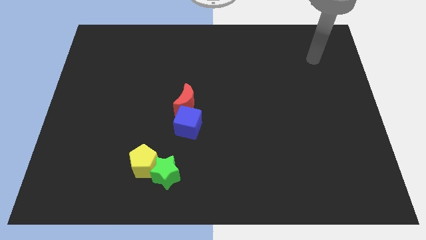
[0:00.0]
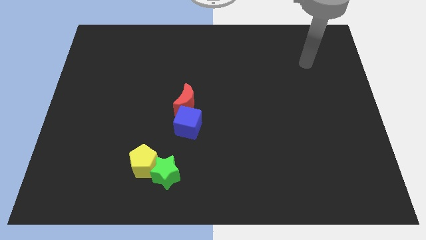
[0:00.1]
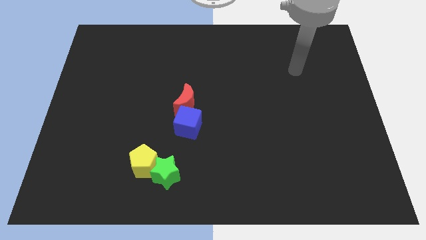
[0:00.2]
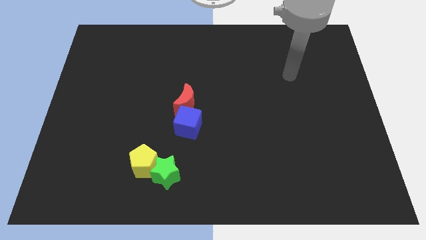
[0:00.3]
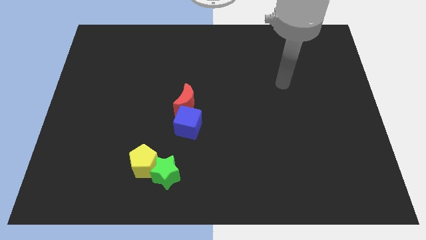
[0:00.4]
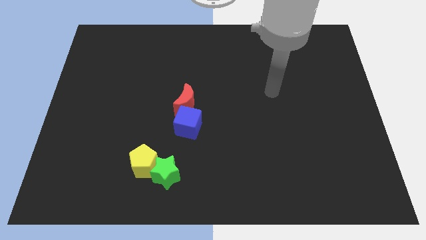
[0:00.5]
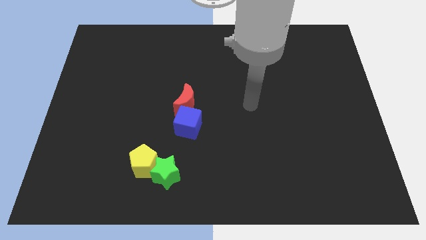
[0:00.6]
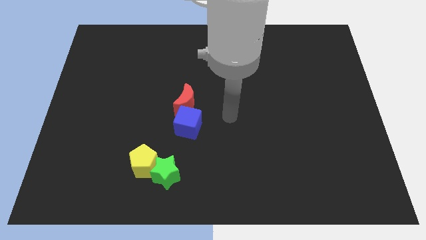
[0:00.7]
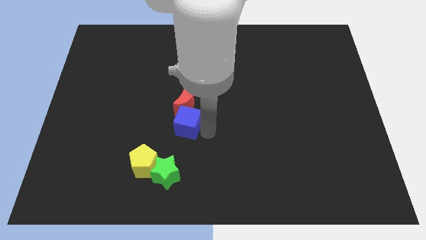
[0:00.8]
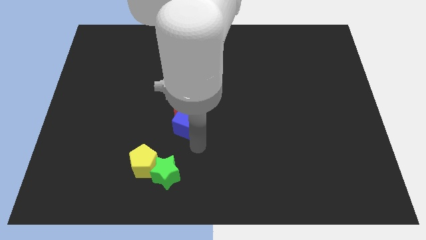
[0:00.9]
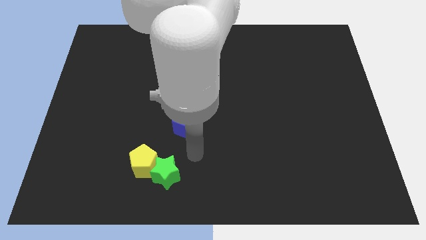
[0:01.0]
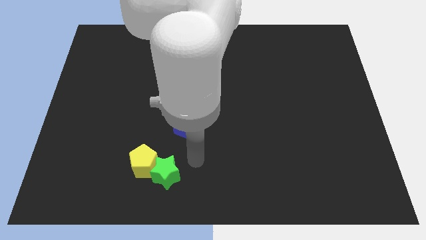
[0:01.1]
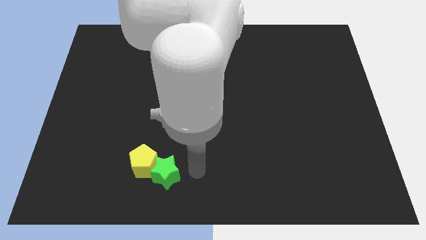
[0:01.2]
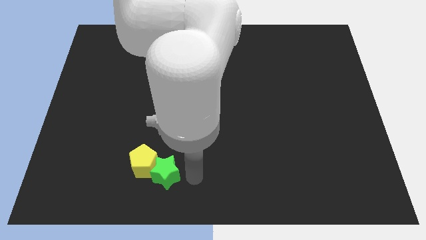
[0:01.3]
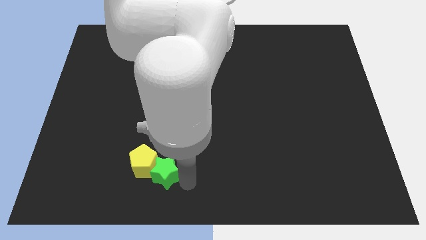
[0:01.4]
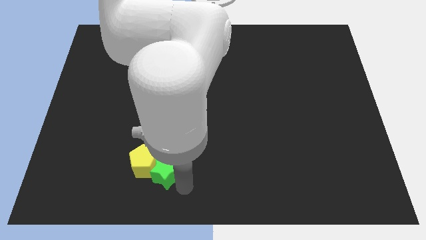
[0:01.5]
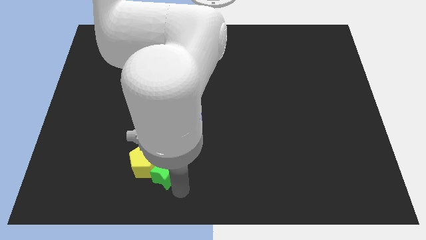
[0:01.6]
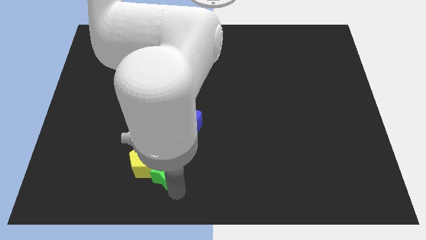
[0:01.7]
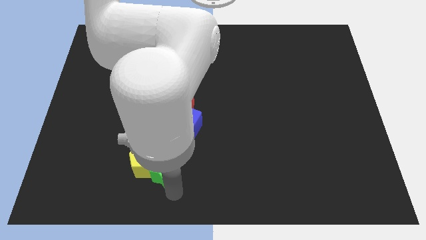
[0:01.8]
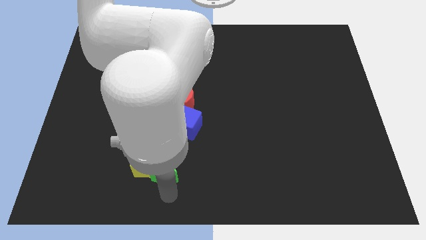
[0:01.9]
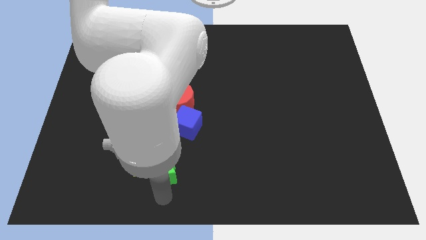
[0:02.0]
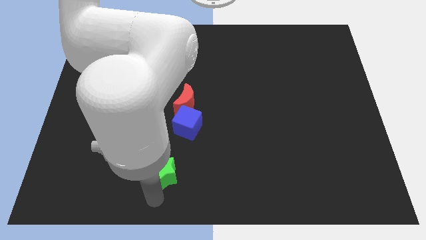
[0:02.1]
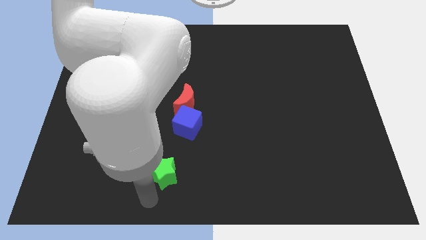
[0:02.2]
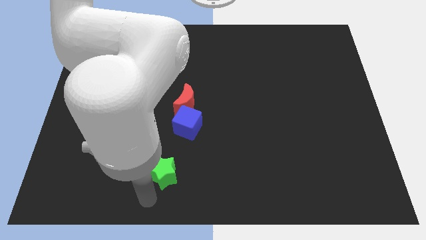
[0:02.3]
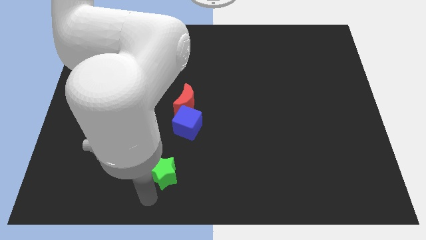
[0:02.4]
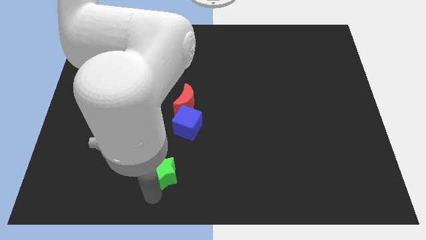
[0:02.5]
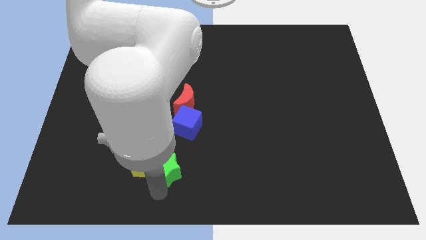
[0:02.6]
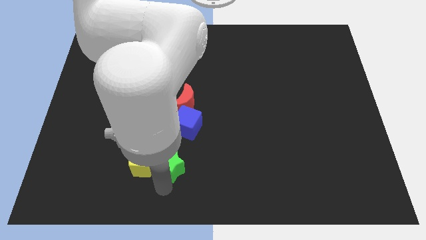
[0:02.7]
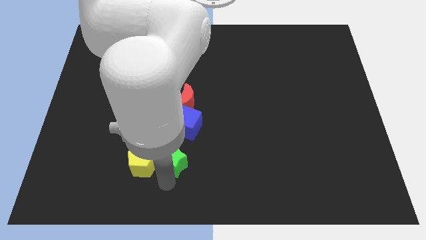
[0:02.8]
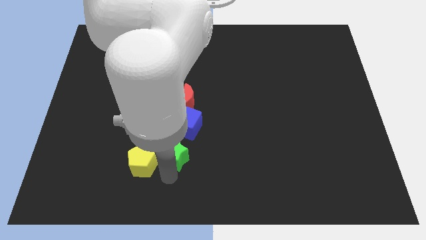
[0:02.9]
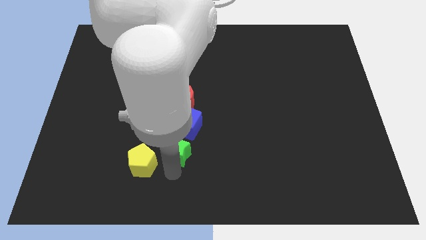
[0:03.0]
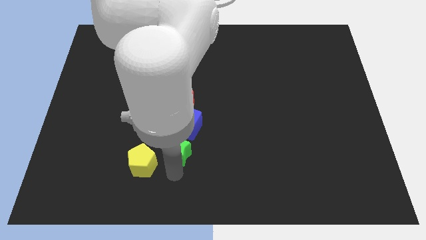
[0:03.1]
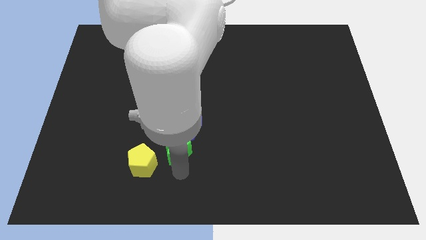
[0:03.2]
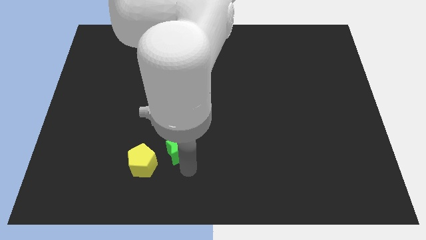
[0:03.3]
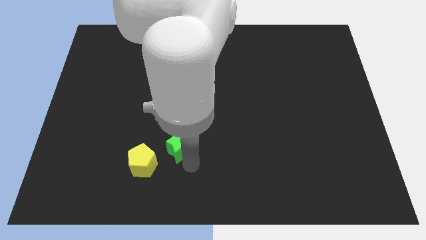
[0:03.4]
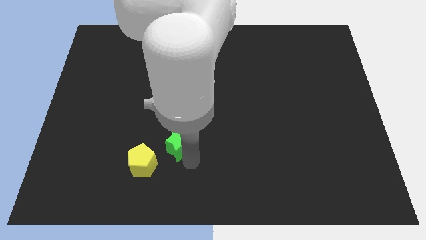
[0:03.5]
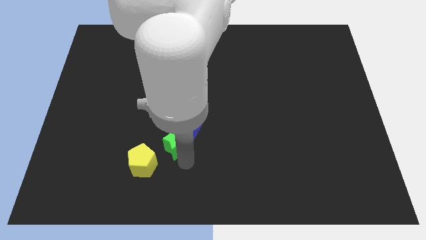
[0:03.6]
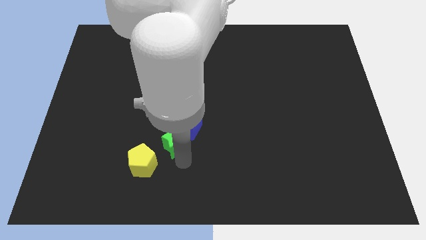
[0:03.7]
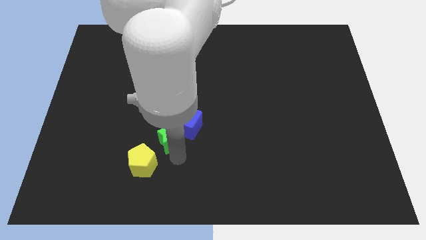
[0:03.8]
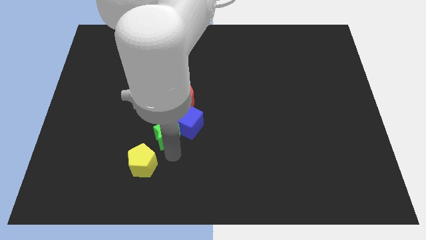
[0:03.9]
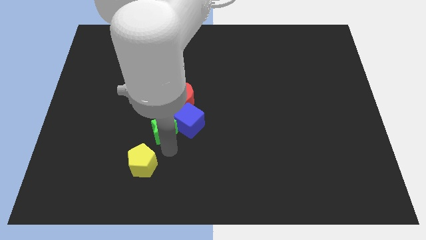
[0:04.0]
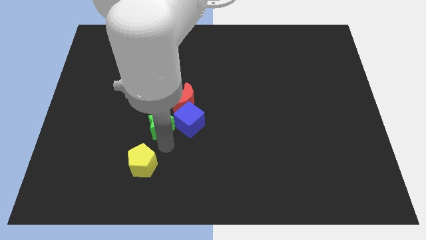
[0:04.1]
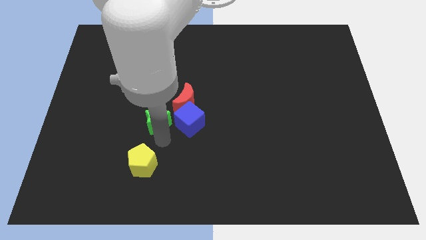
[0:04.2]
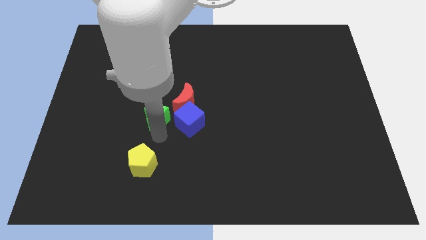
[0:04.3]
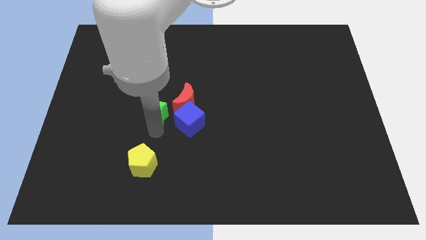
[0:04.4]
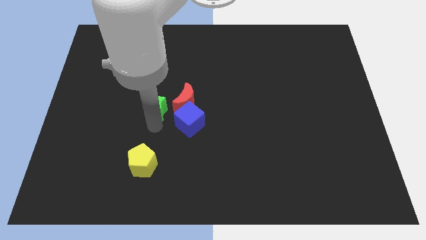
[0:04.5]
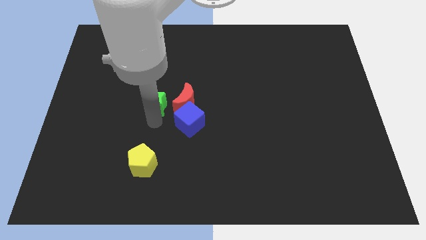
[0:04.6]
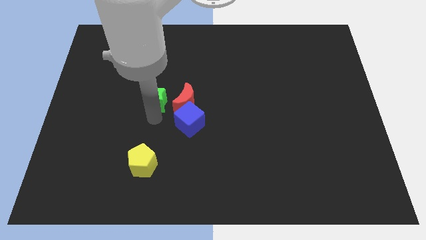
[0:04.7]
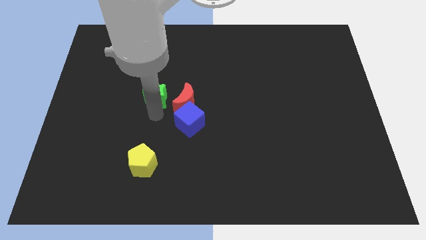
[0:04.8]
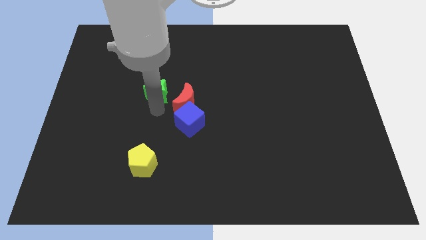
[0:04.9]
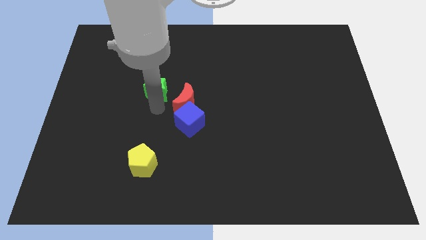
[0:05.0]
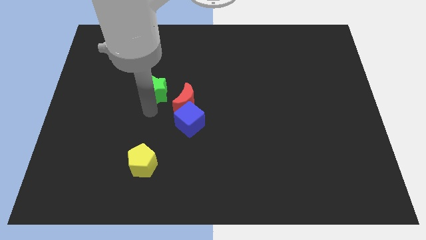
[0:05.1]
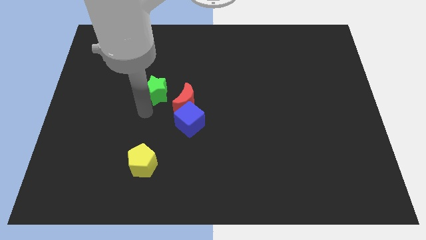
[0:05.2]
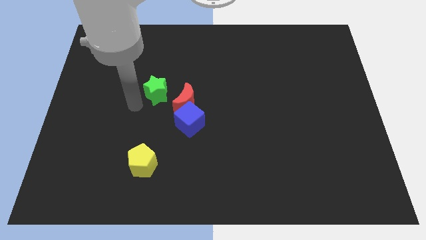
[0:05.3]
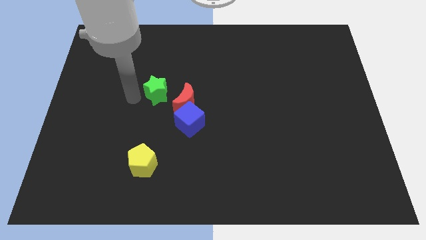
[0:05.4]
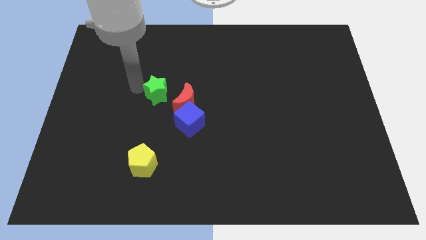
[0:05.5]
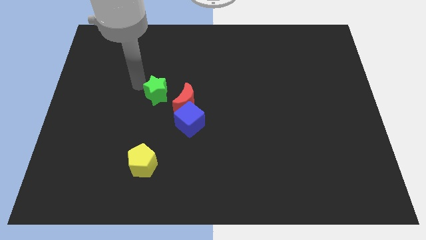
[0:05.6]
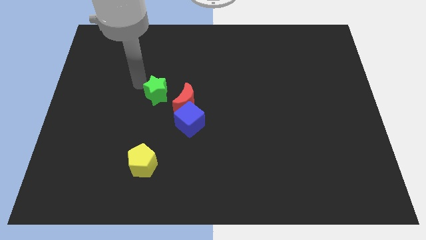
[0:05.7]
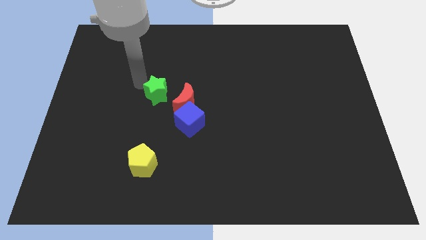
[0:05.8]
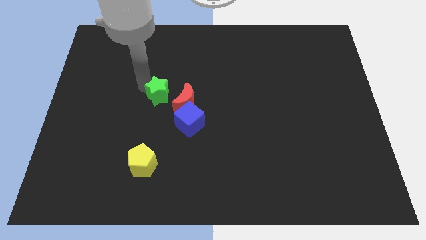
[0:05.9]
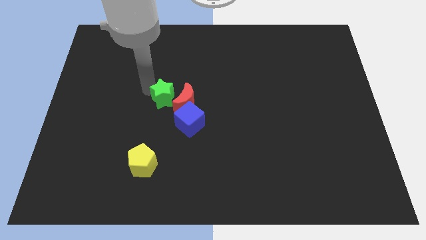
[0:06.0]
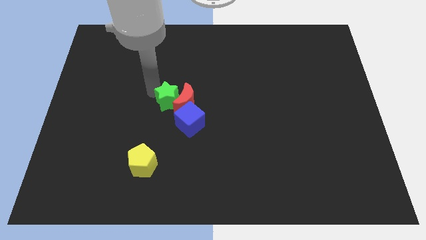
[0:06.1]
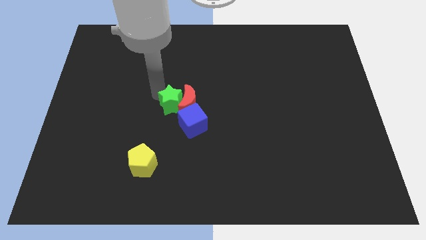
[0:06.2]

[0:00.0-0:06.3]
push the green block towards the moon

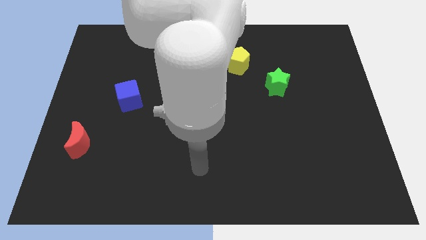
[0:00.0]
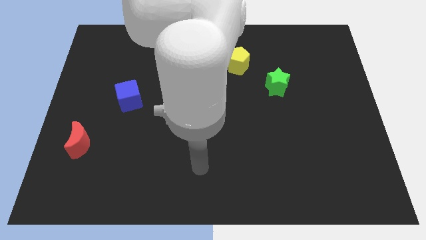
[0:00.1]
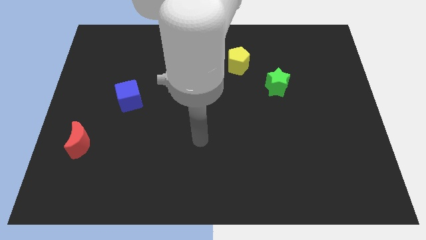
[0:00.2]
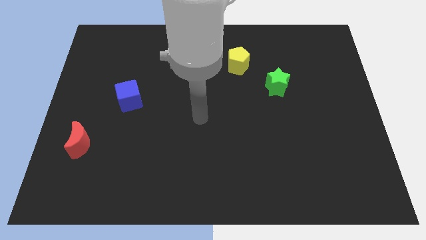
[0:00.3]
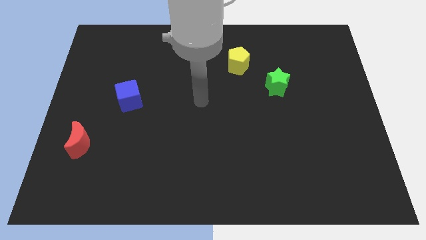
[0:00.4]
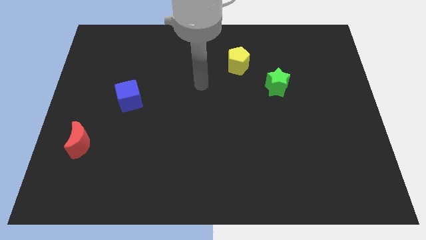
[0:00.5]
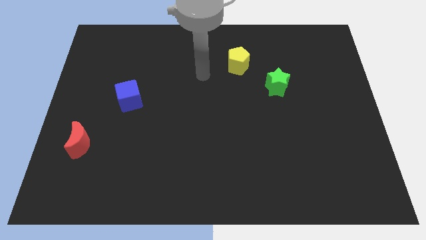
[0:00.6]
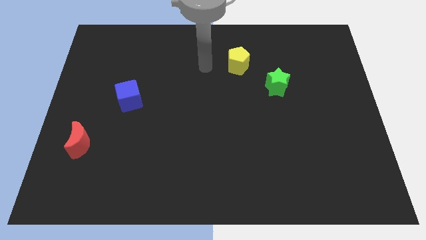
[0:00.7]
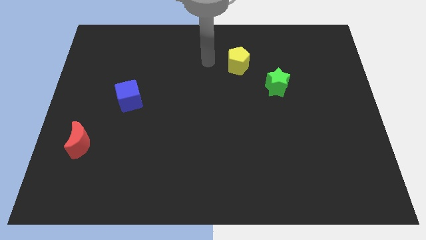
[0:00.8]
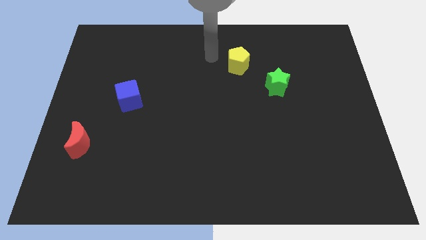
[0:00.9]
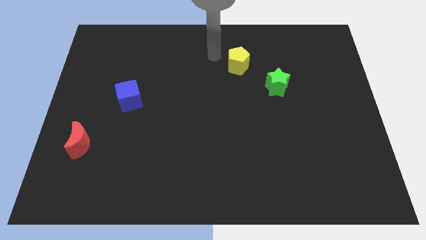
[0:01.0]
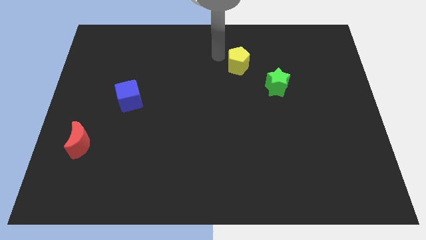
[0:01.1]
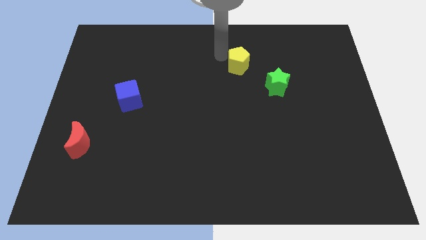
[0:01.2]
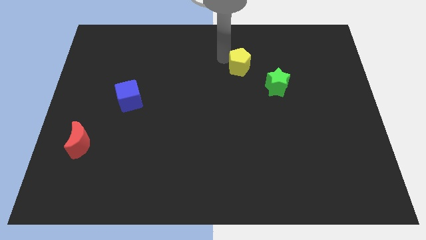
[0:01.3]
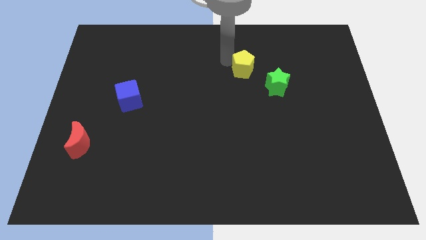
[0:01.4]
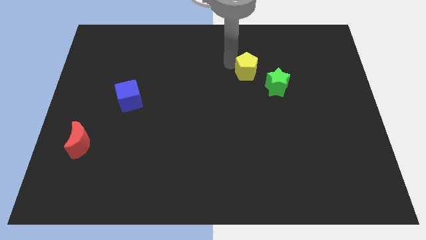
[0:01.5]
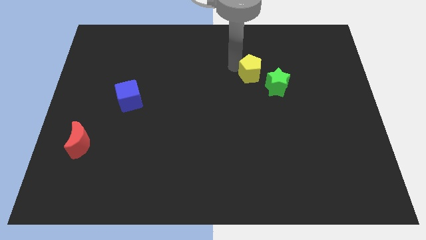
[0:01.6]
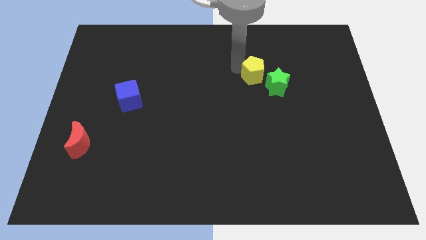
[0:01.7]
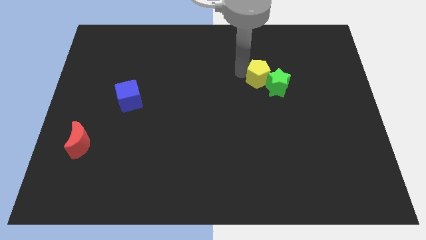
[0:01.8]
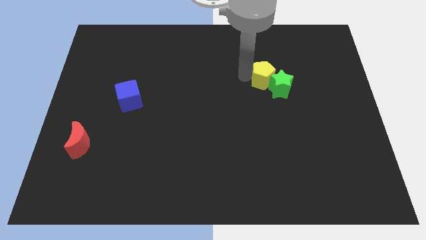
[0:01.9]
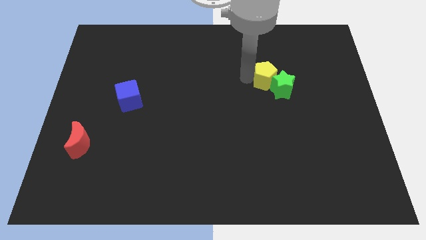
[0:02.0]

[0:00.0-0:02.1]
move the yellow pentagon towards the green star

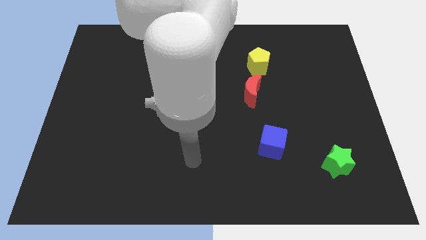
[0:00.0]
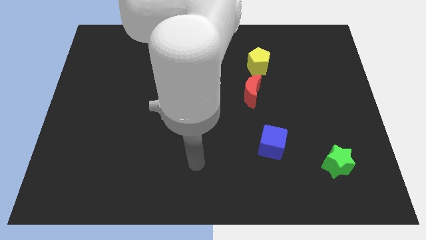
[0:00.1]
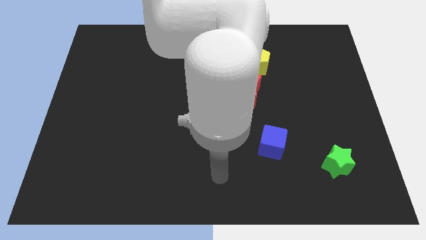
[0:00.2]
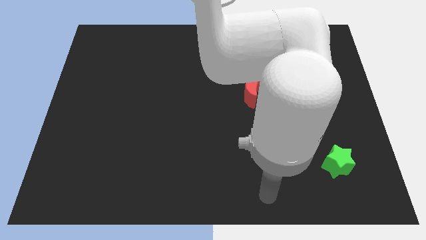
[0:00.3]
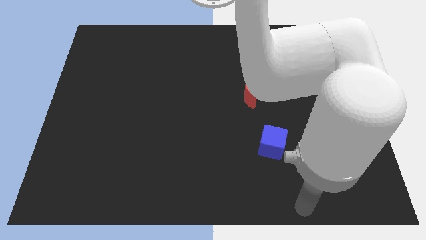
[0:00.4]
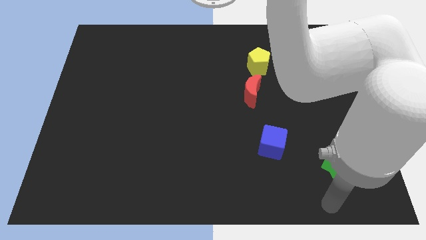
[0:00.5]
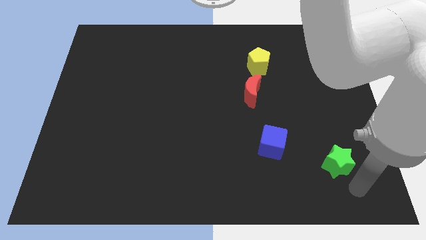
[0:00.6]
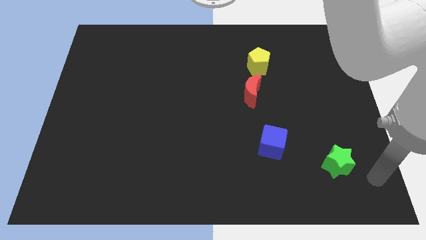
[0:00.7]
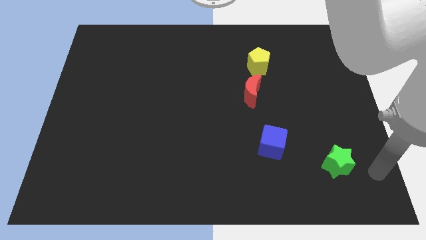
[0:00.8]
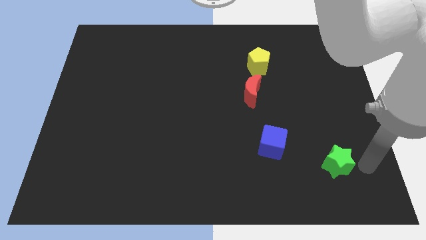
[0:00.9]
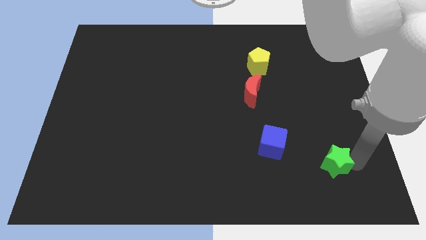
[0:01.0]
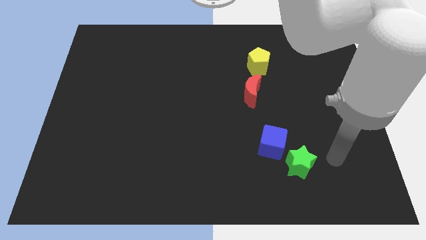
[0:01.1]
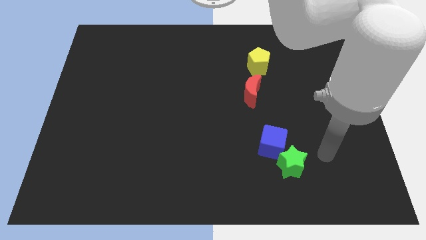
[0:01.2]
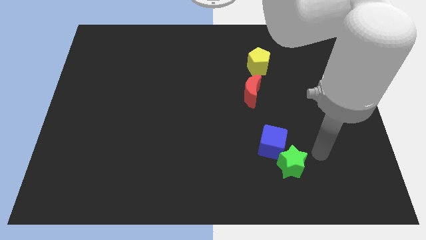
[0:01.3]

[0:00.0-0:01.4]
put the star next to the cube
